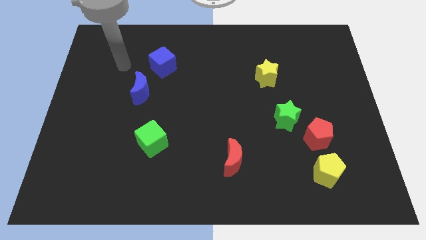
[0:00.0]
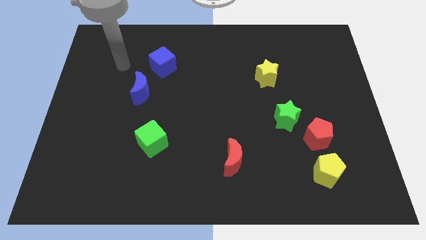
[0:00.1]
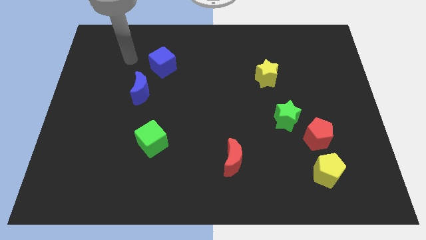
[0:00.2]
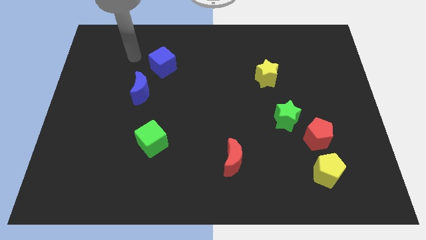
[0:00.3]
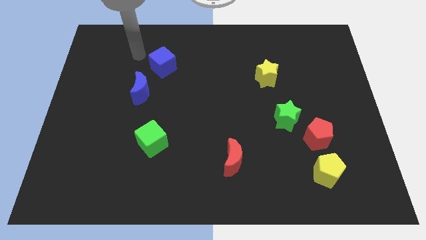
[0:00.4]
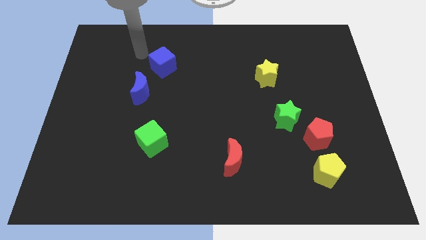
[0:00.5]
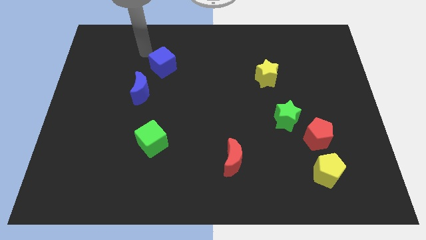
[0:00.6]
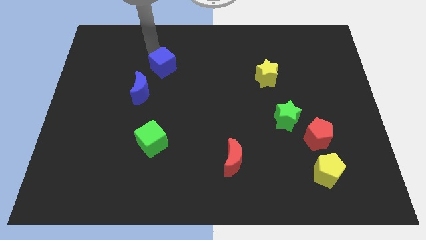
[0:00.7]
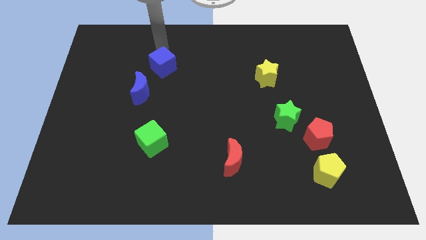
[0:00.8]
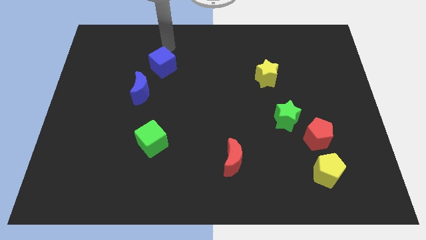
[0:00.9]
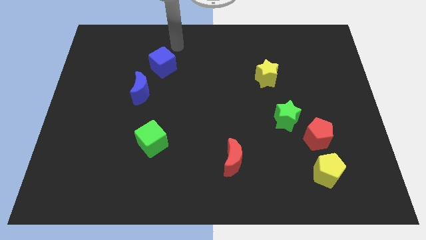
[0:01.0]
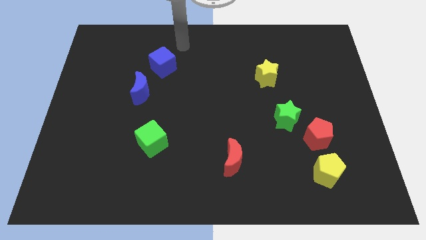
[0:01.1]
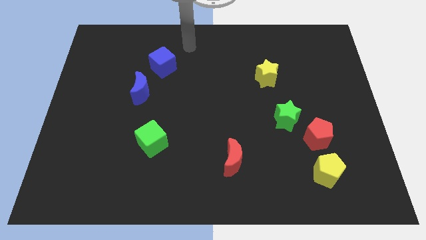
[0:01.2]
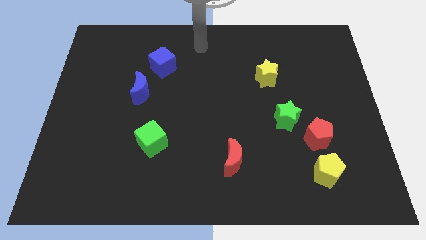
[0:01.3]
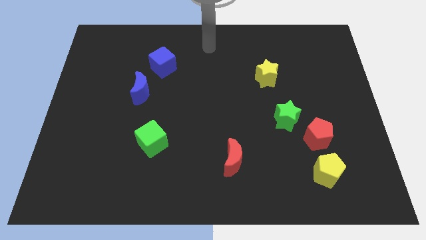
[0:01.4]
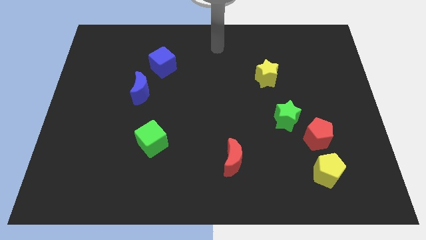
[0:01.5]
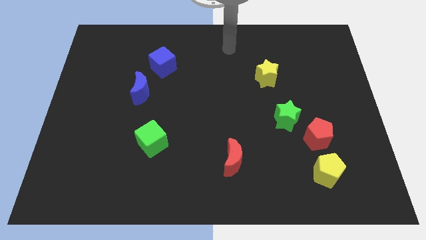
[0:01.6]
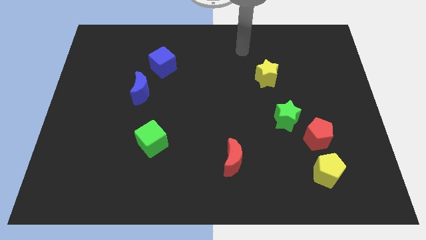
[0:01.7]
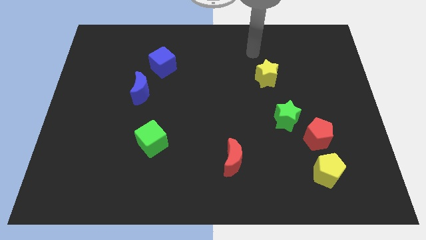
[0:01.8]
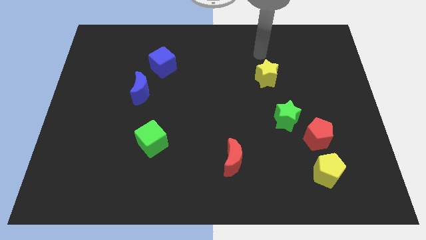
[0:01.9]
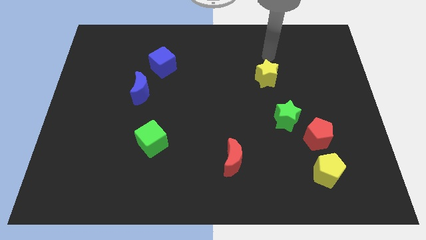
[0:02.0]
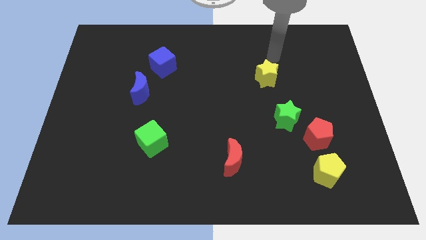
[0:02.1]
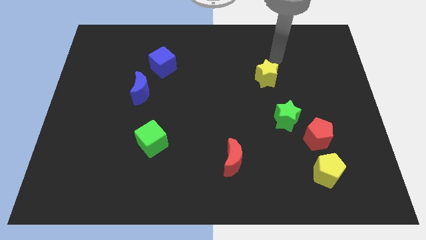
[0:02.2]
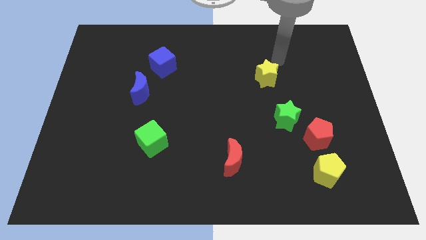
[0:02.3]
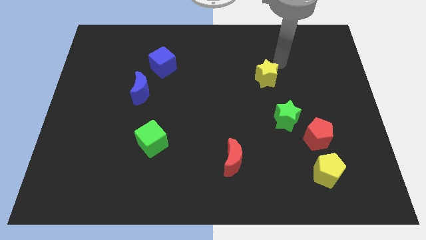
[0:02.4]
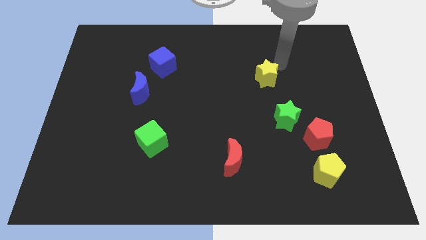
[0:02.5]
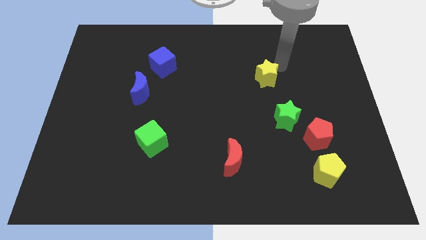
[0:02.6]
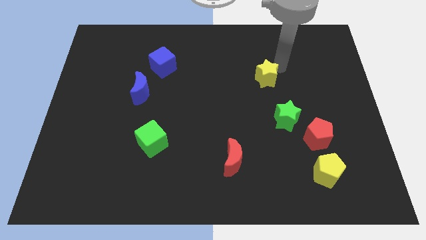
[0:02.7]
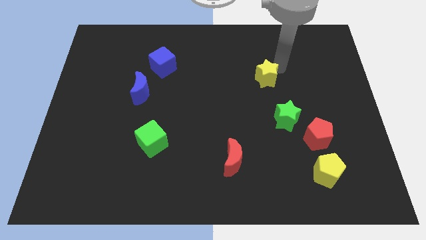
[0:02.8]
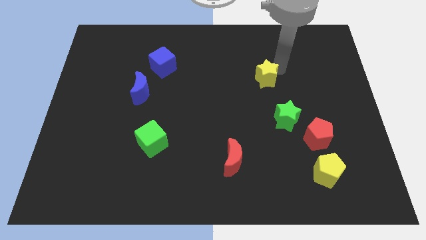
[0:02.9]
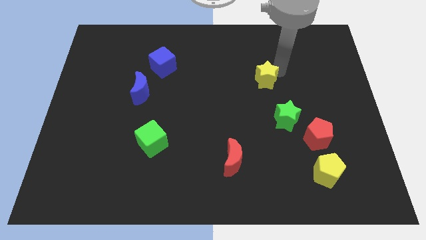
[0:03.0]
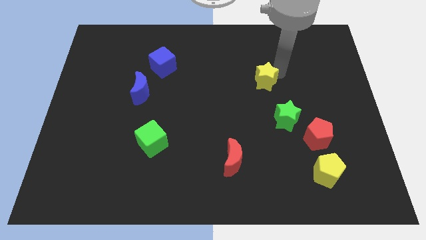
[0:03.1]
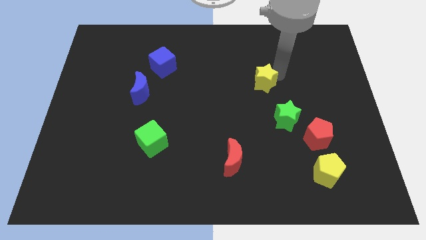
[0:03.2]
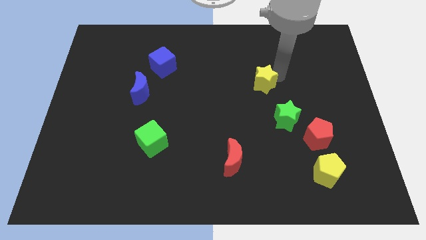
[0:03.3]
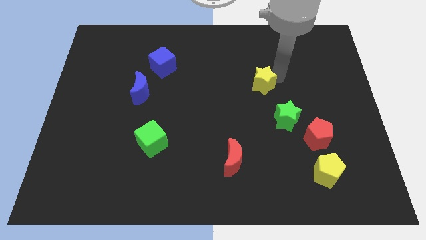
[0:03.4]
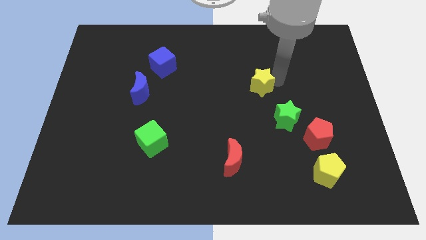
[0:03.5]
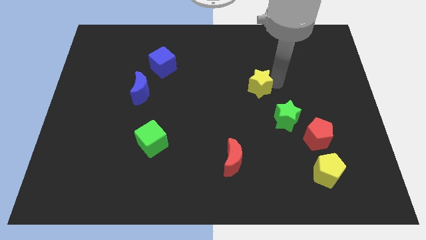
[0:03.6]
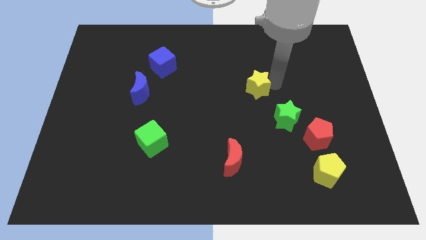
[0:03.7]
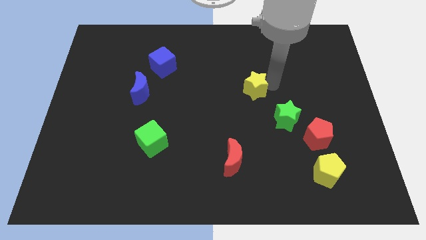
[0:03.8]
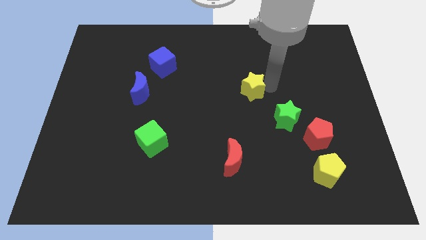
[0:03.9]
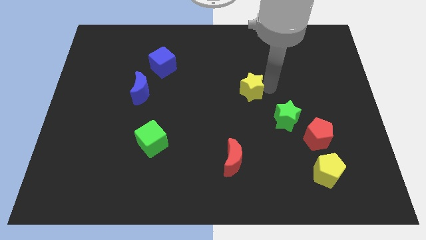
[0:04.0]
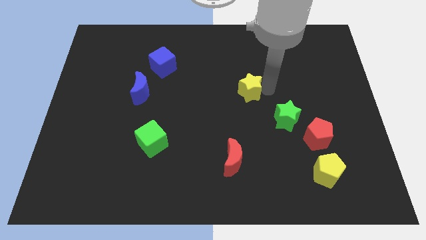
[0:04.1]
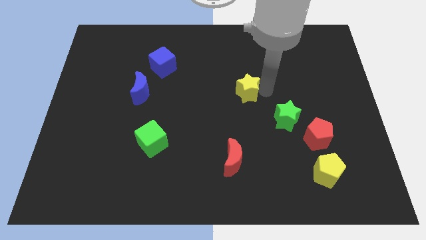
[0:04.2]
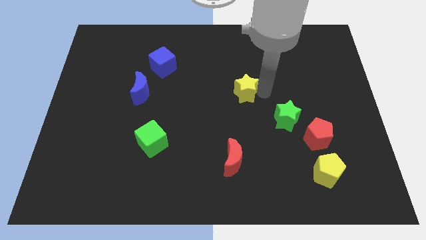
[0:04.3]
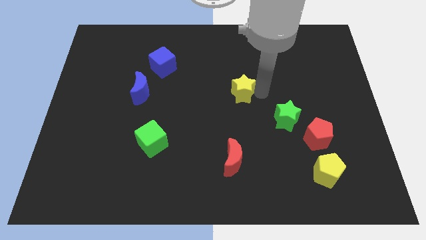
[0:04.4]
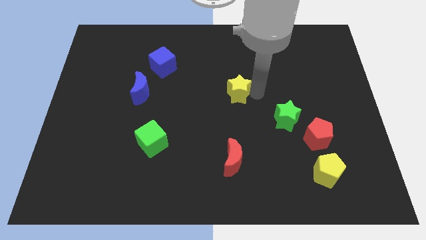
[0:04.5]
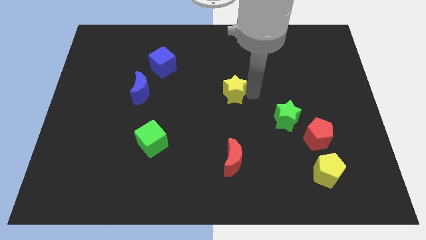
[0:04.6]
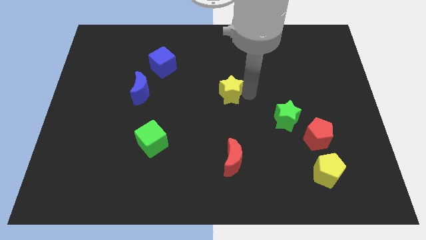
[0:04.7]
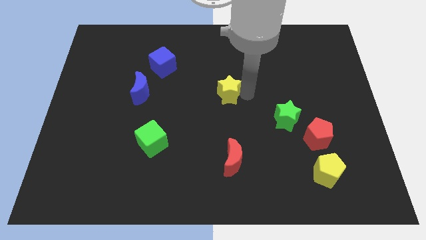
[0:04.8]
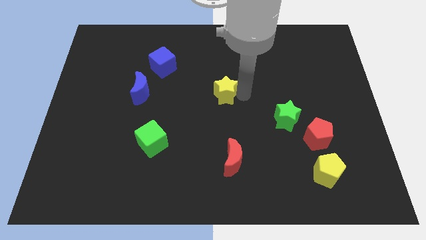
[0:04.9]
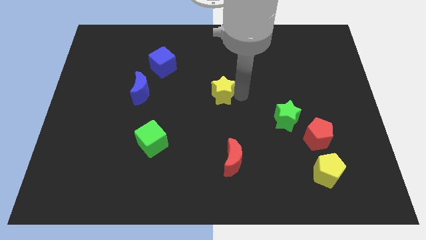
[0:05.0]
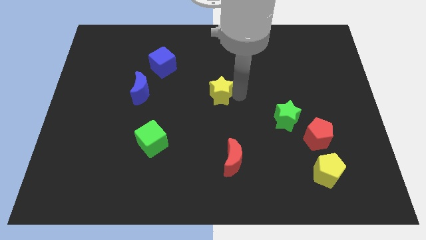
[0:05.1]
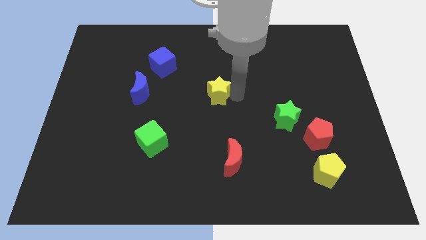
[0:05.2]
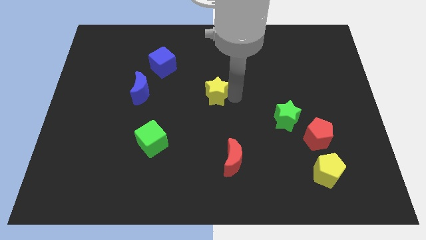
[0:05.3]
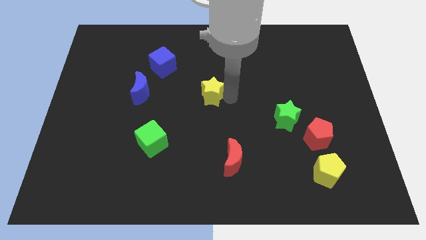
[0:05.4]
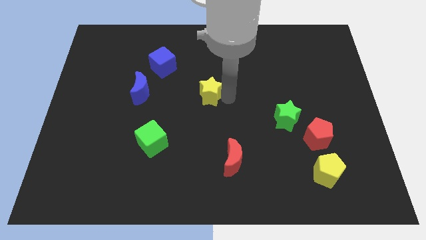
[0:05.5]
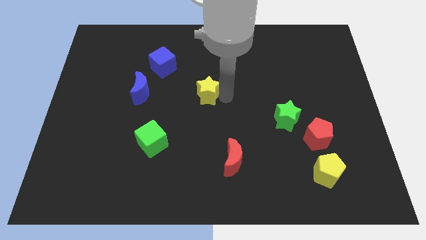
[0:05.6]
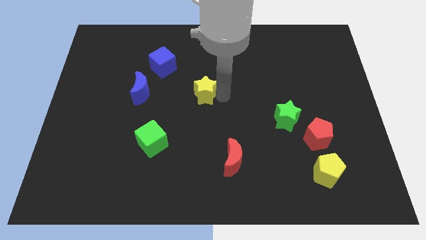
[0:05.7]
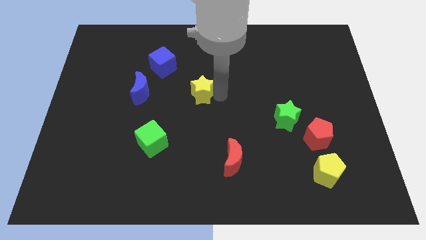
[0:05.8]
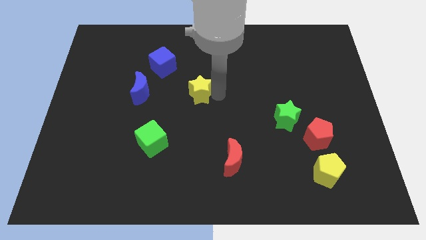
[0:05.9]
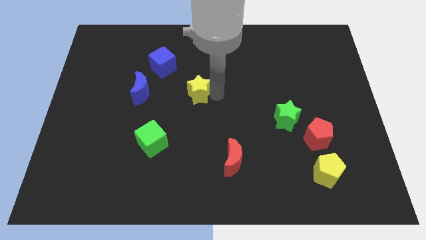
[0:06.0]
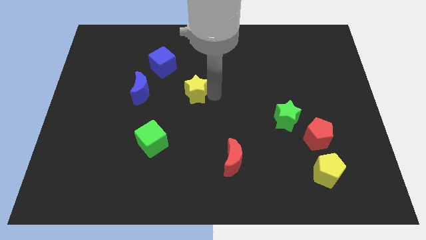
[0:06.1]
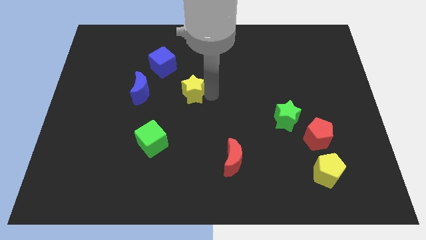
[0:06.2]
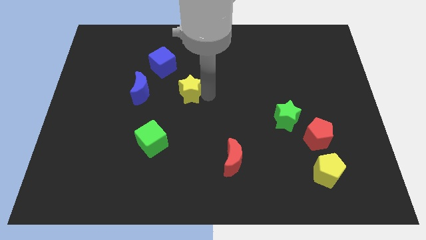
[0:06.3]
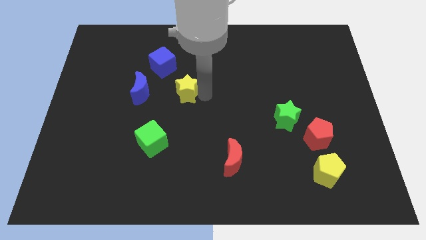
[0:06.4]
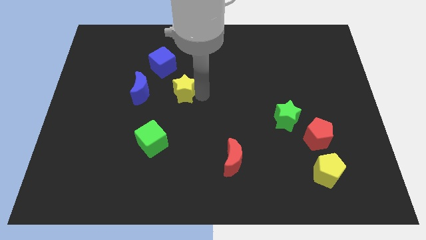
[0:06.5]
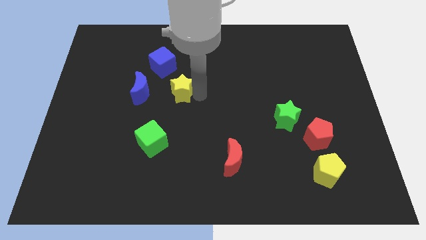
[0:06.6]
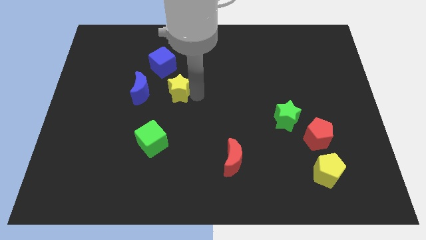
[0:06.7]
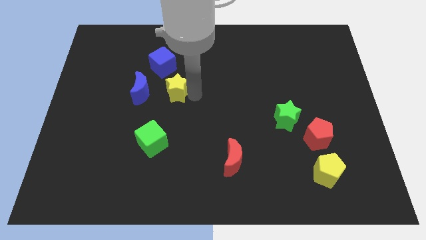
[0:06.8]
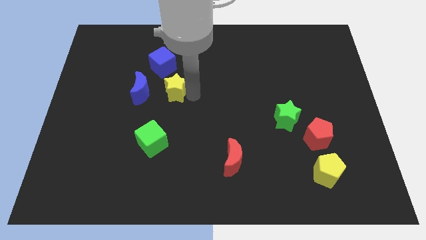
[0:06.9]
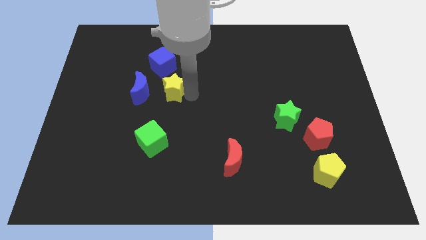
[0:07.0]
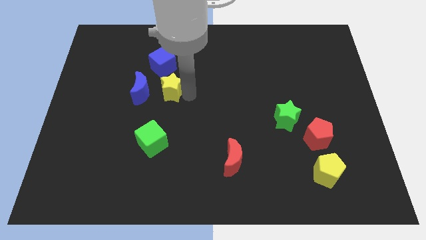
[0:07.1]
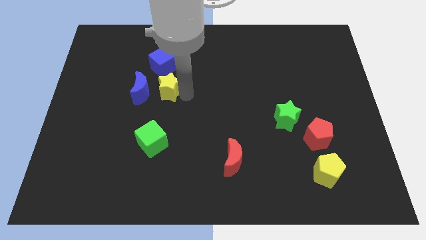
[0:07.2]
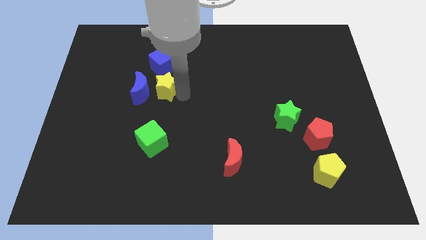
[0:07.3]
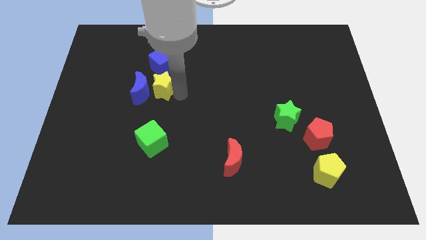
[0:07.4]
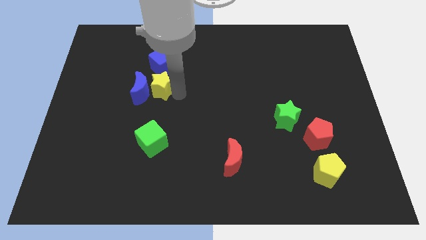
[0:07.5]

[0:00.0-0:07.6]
move the yellow star to the blue moon

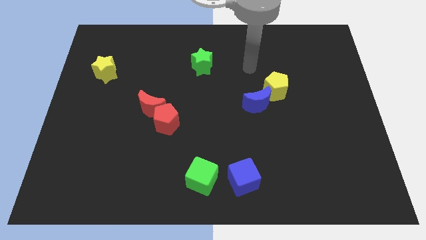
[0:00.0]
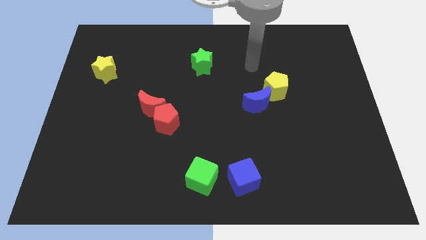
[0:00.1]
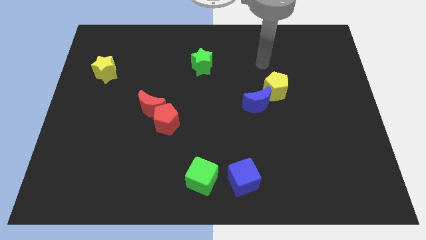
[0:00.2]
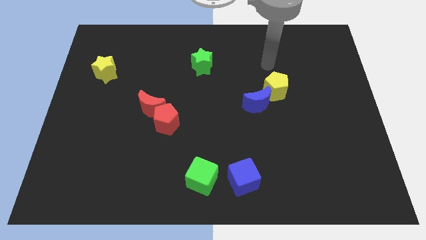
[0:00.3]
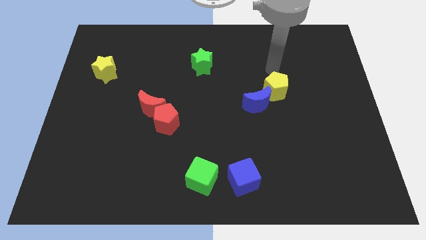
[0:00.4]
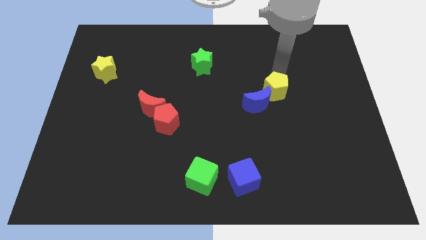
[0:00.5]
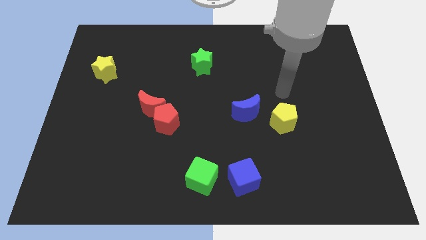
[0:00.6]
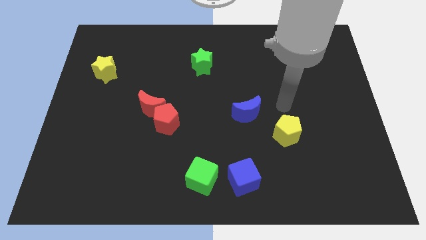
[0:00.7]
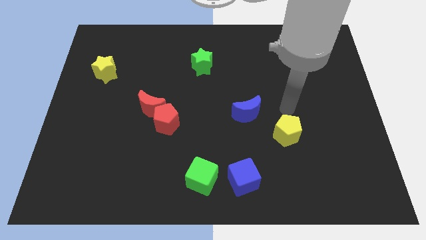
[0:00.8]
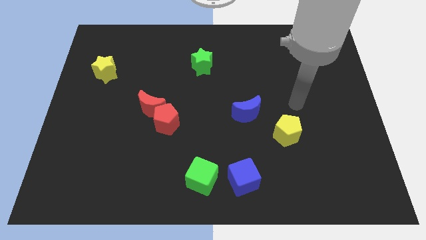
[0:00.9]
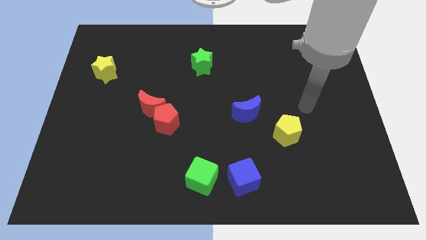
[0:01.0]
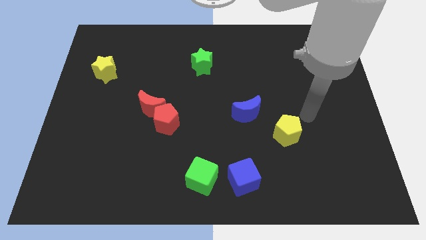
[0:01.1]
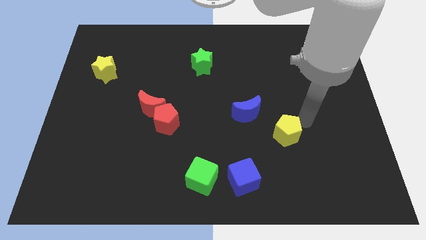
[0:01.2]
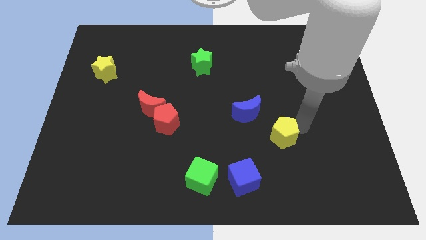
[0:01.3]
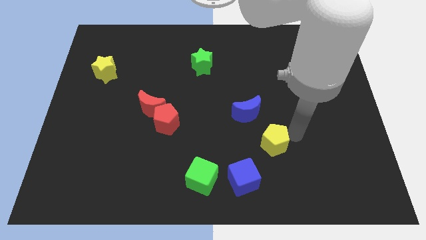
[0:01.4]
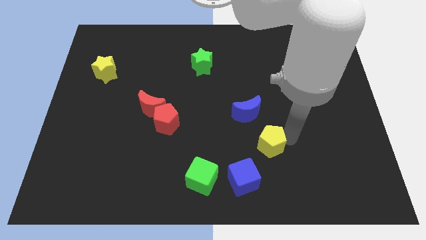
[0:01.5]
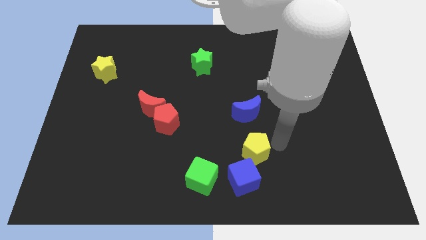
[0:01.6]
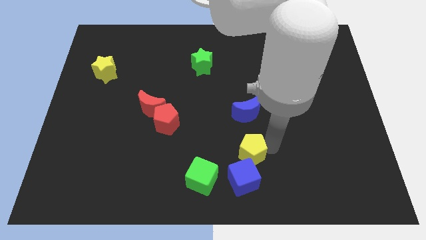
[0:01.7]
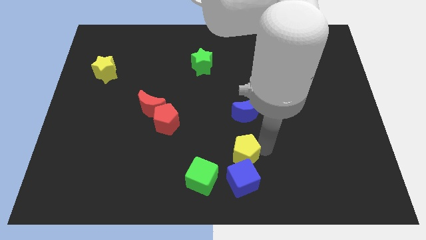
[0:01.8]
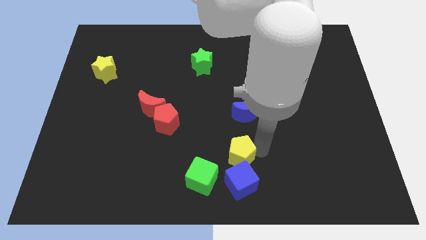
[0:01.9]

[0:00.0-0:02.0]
move the yellow pentagon to the blue cube
